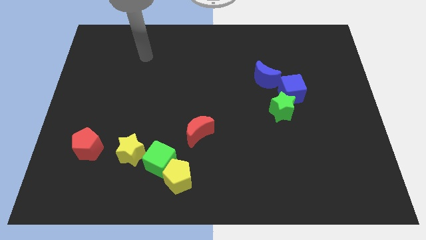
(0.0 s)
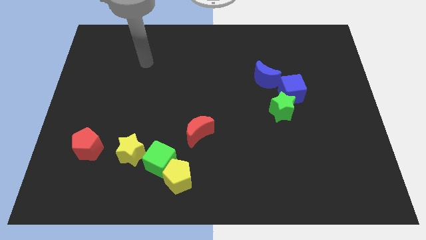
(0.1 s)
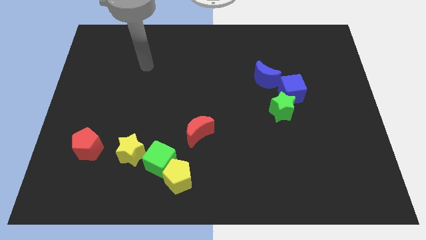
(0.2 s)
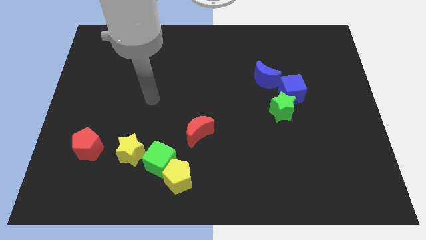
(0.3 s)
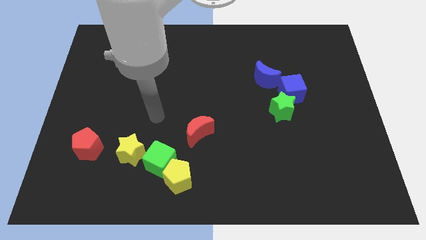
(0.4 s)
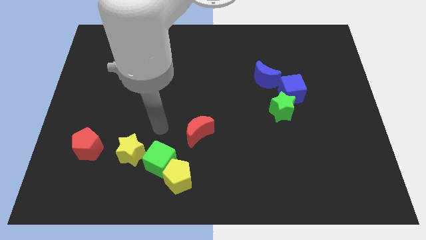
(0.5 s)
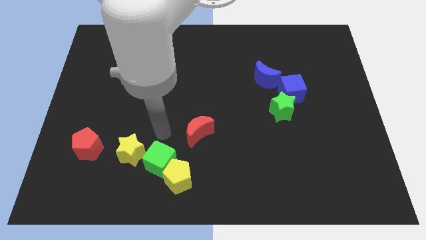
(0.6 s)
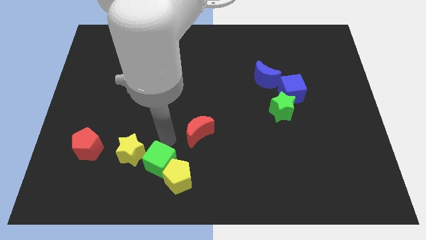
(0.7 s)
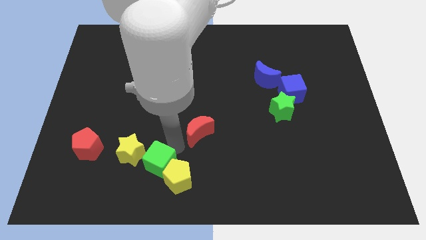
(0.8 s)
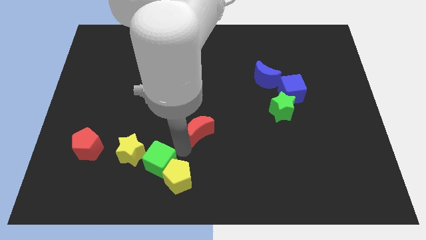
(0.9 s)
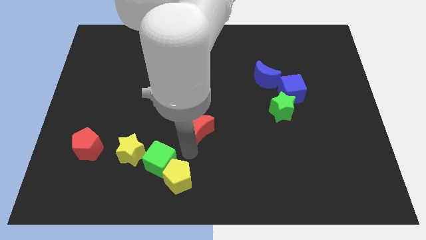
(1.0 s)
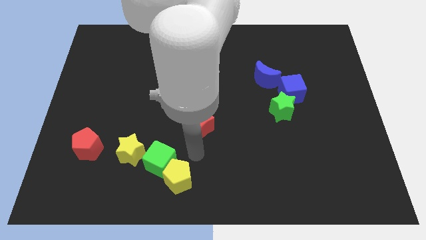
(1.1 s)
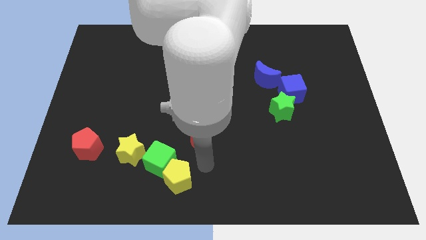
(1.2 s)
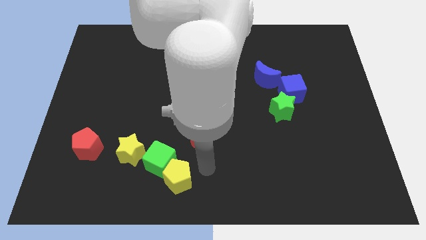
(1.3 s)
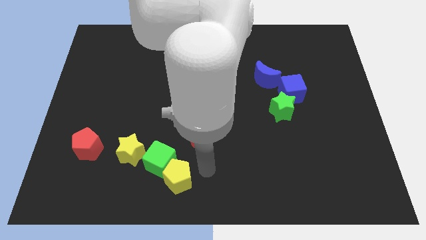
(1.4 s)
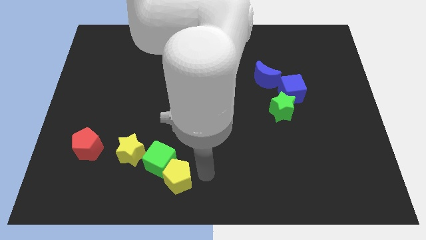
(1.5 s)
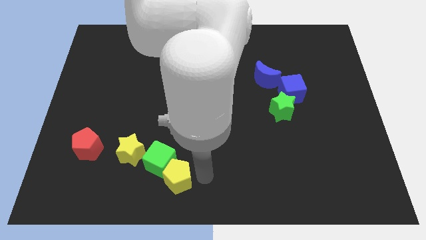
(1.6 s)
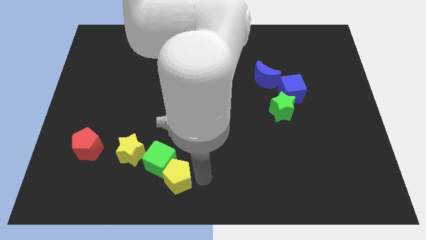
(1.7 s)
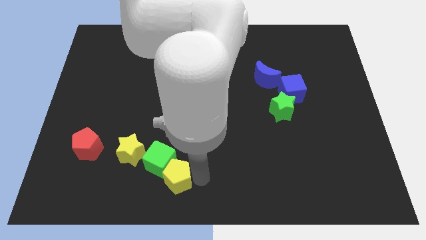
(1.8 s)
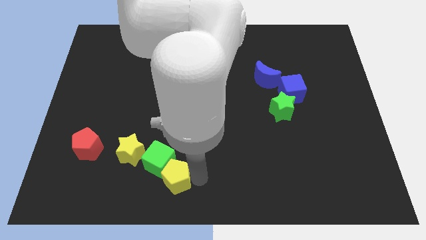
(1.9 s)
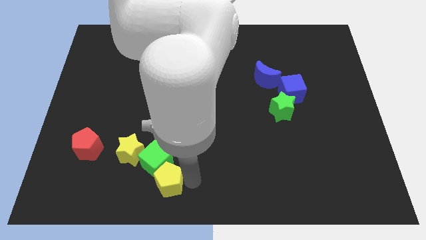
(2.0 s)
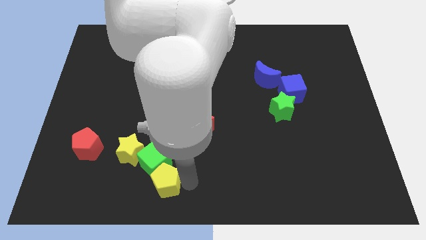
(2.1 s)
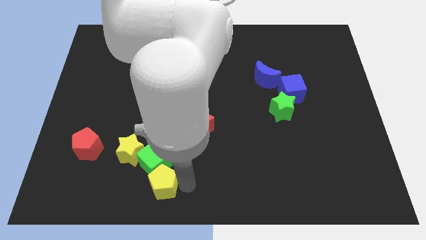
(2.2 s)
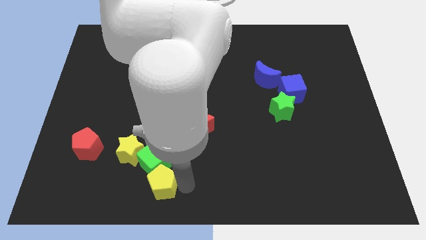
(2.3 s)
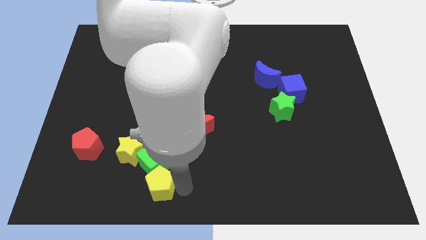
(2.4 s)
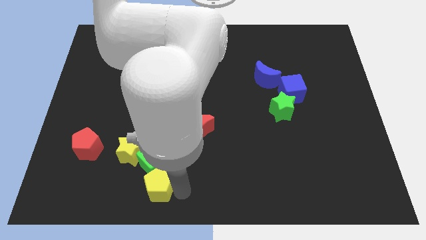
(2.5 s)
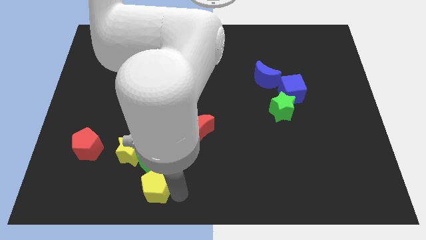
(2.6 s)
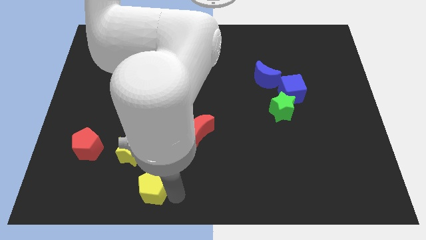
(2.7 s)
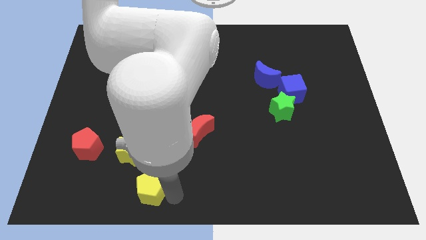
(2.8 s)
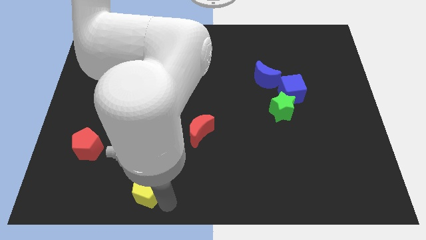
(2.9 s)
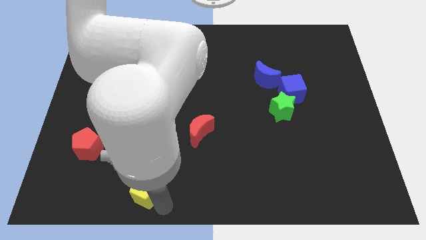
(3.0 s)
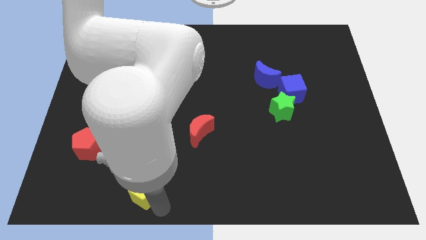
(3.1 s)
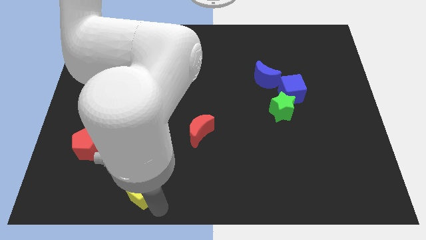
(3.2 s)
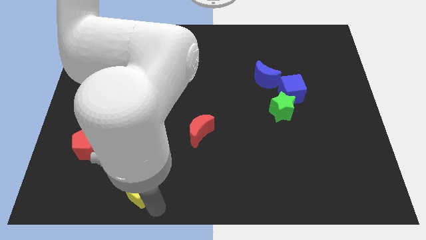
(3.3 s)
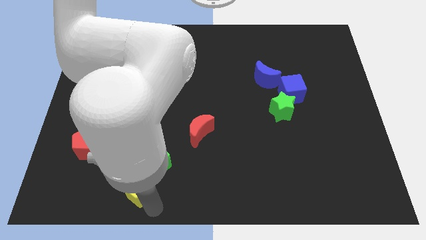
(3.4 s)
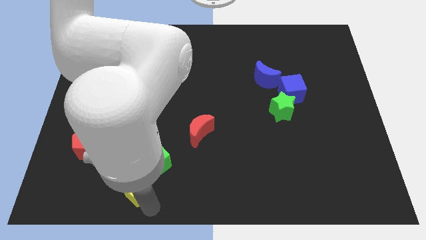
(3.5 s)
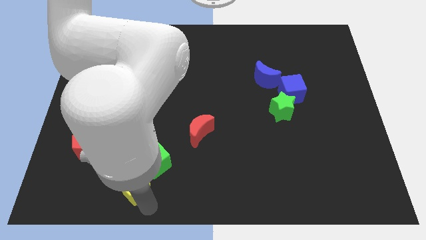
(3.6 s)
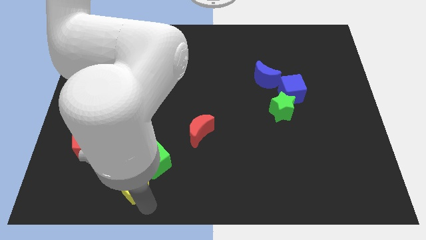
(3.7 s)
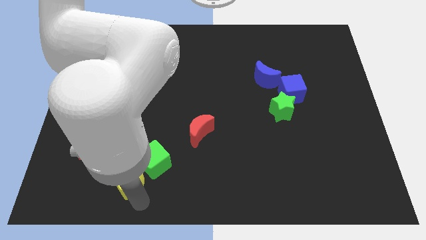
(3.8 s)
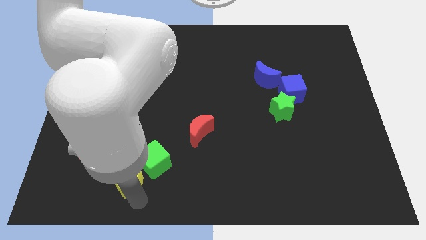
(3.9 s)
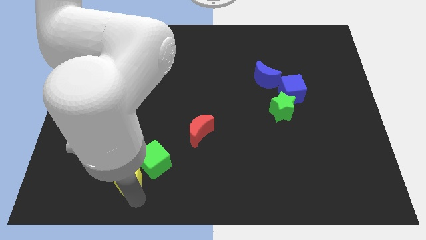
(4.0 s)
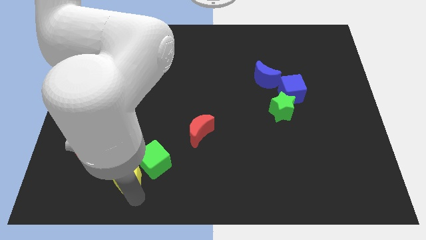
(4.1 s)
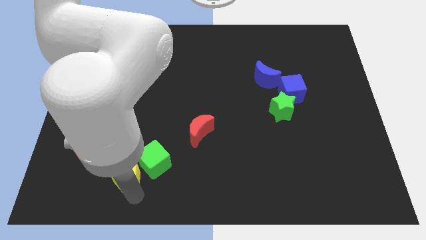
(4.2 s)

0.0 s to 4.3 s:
put the yellow pentagon next to the yellow star

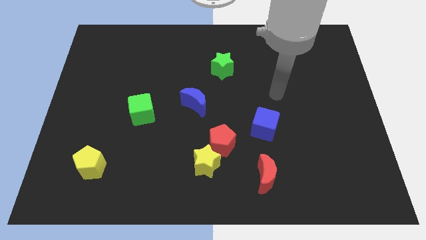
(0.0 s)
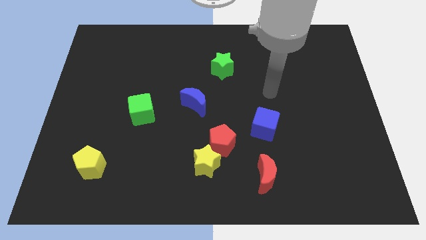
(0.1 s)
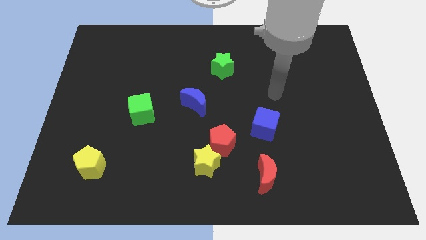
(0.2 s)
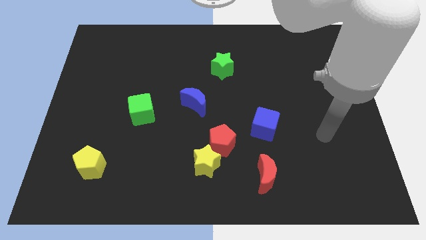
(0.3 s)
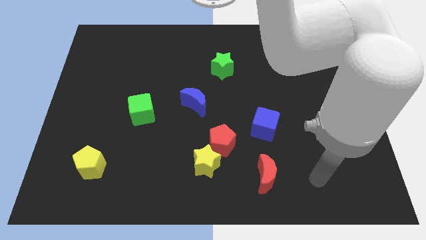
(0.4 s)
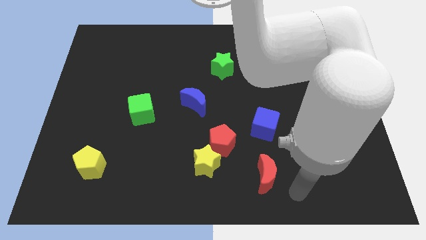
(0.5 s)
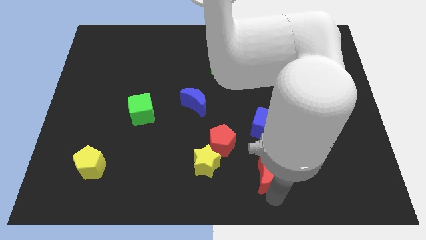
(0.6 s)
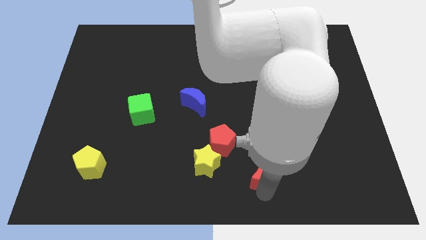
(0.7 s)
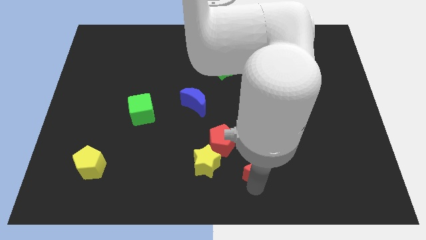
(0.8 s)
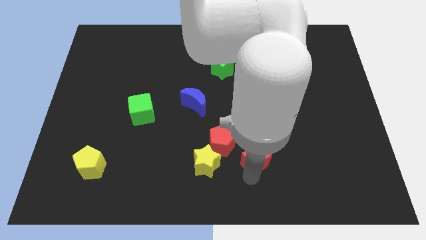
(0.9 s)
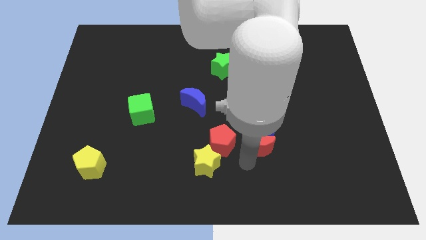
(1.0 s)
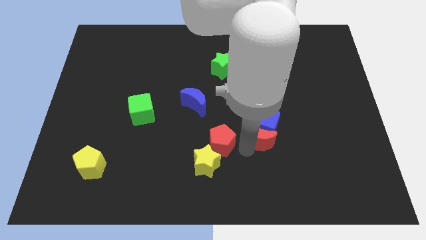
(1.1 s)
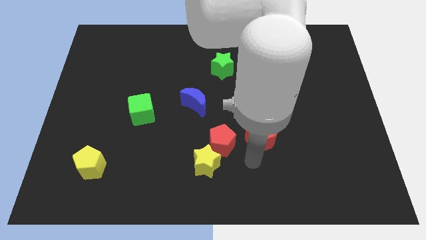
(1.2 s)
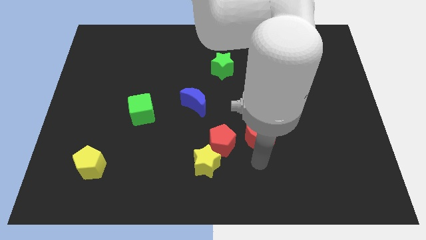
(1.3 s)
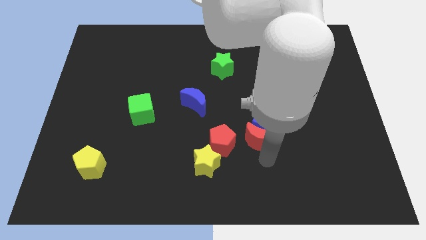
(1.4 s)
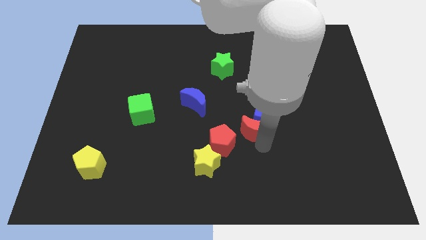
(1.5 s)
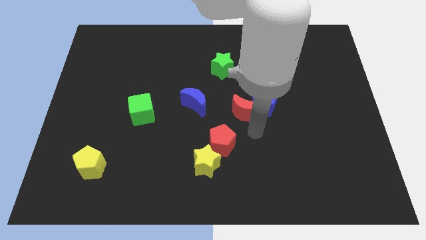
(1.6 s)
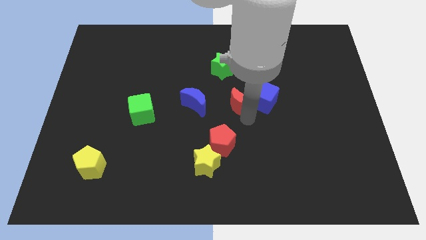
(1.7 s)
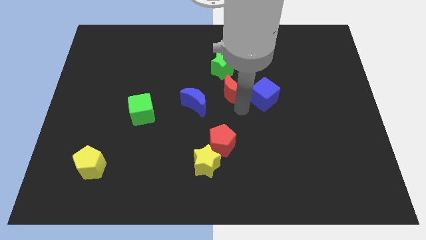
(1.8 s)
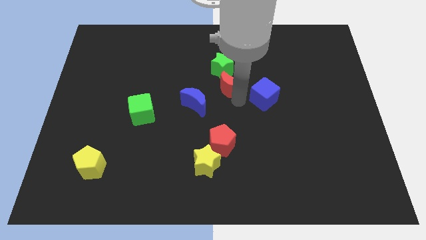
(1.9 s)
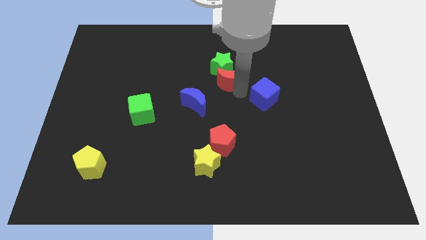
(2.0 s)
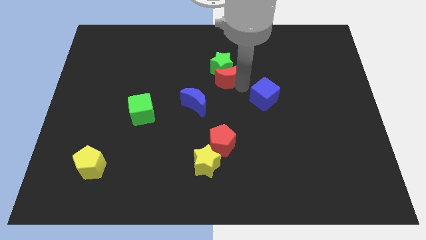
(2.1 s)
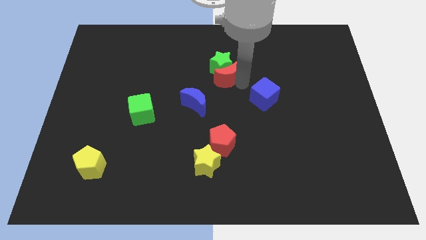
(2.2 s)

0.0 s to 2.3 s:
move the red moon next to the green star

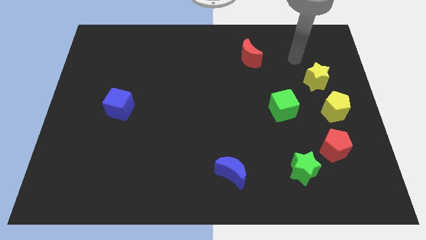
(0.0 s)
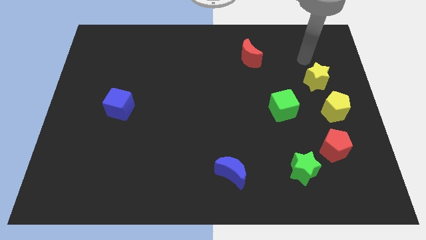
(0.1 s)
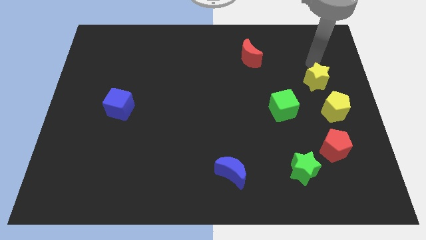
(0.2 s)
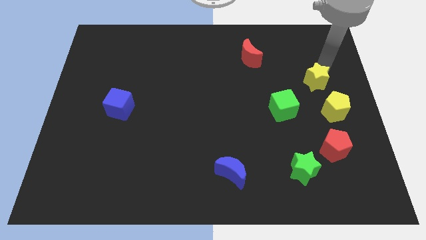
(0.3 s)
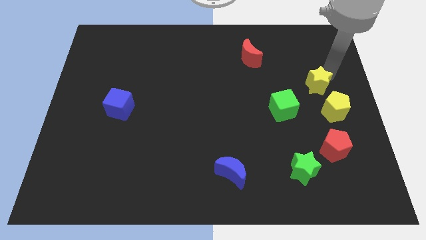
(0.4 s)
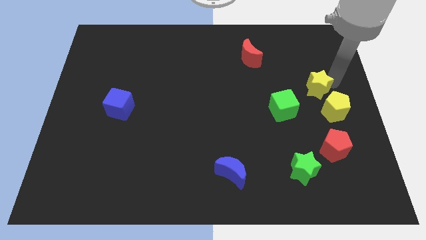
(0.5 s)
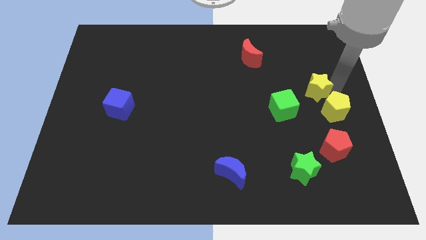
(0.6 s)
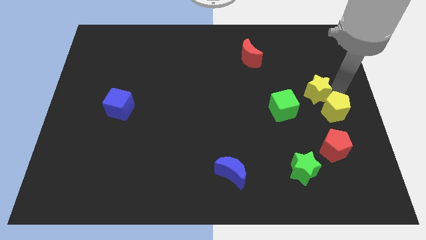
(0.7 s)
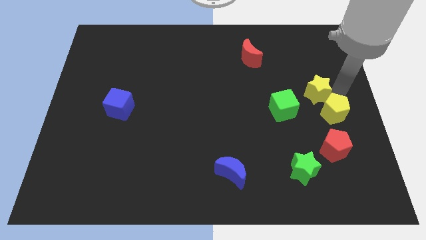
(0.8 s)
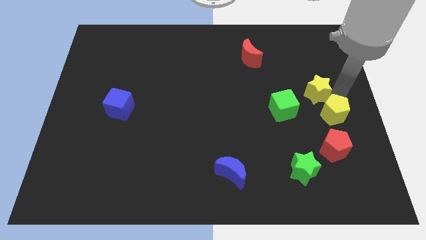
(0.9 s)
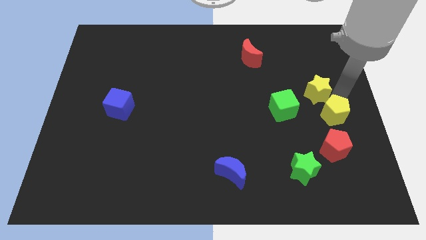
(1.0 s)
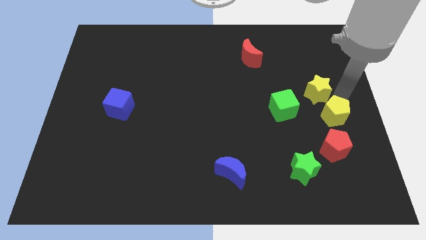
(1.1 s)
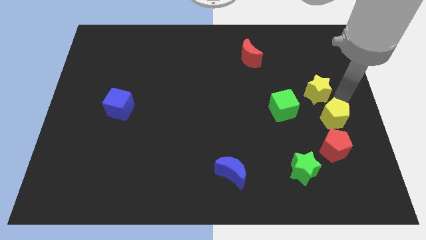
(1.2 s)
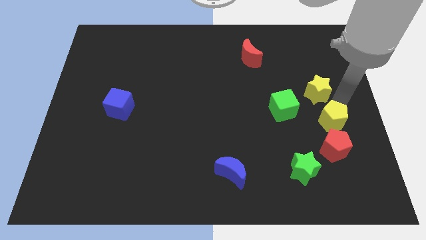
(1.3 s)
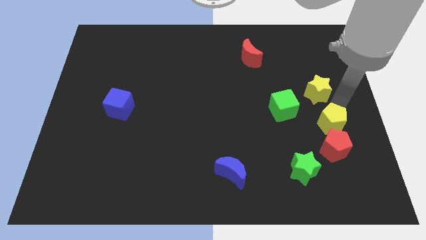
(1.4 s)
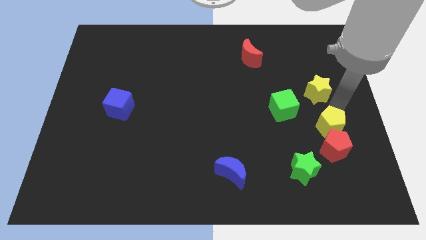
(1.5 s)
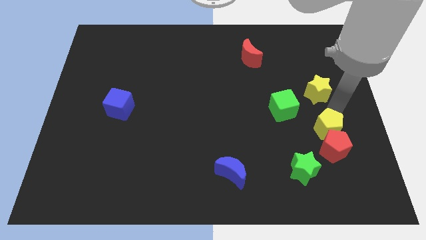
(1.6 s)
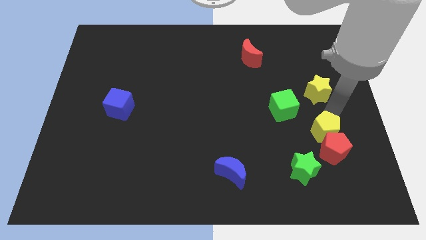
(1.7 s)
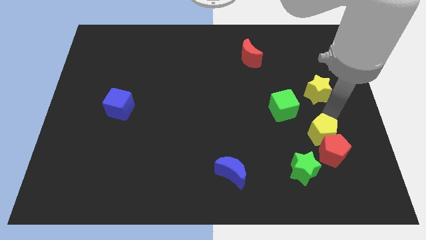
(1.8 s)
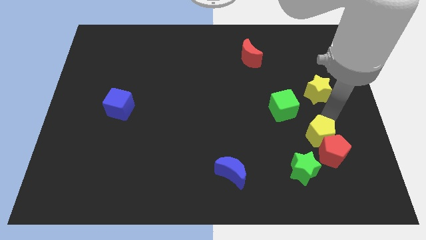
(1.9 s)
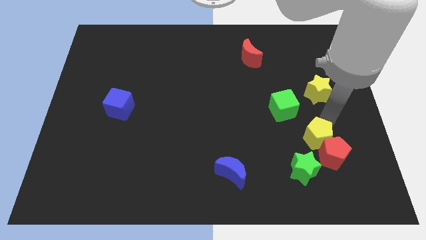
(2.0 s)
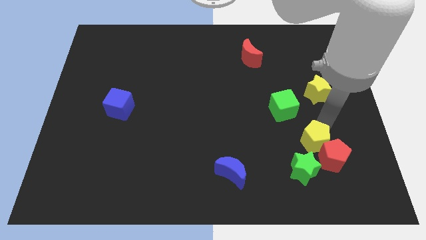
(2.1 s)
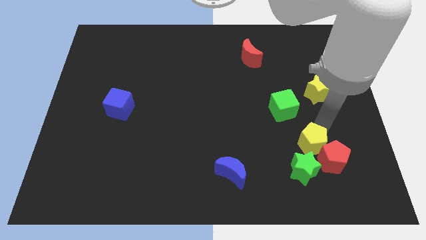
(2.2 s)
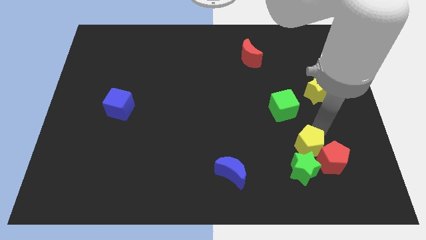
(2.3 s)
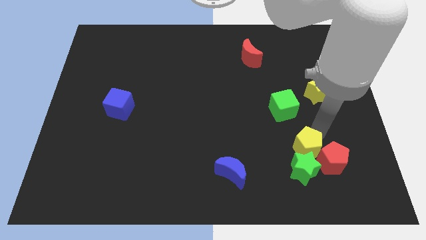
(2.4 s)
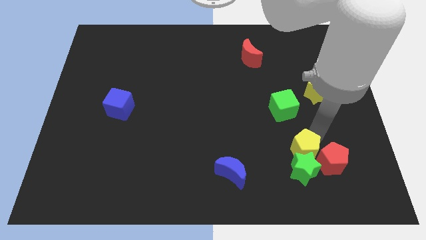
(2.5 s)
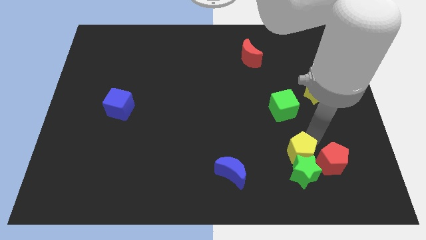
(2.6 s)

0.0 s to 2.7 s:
put the yellow pentagon next to the green star
